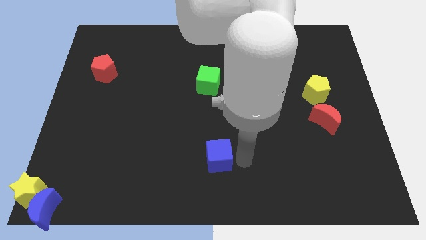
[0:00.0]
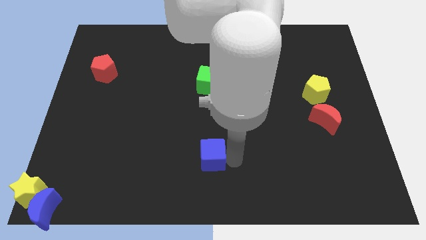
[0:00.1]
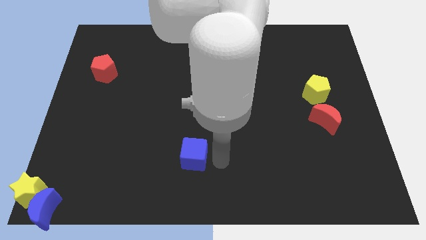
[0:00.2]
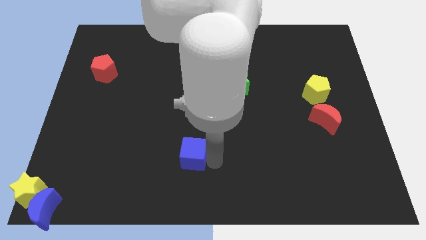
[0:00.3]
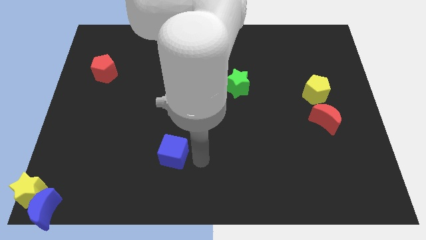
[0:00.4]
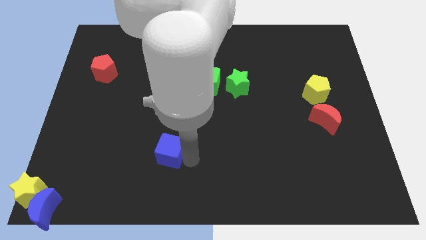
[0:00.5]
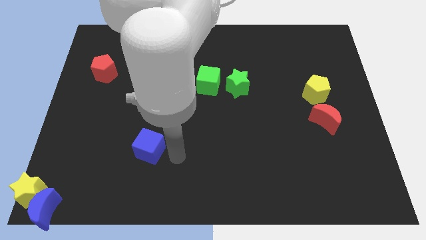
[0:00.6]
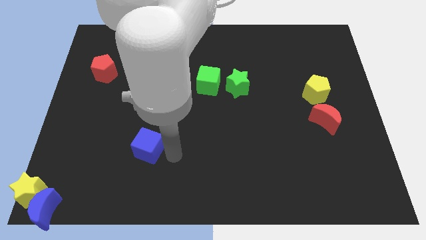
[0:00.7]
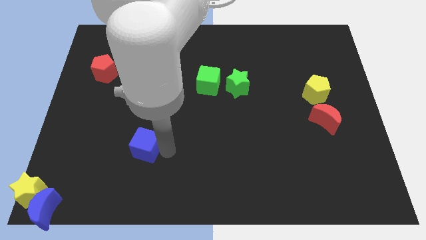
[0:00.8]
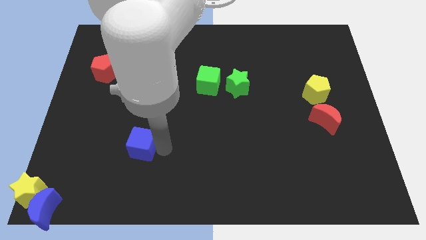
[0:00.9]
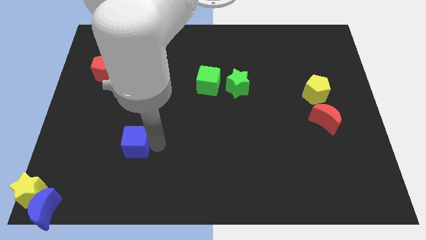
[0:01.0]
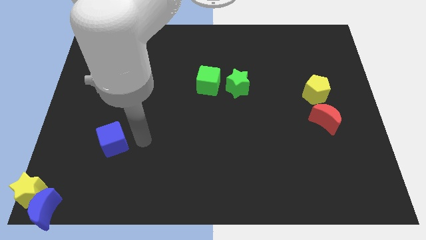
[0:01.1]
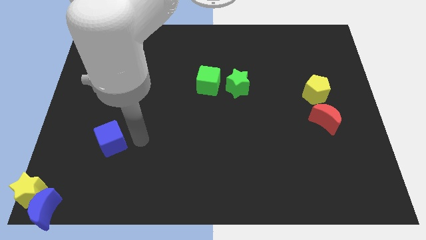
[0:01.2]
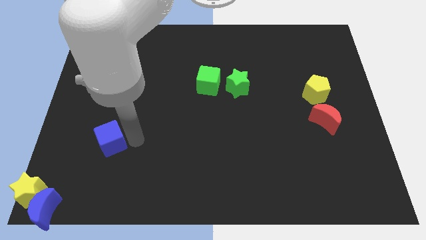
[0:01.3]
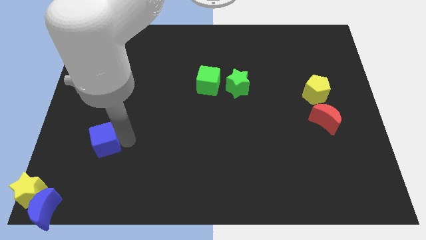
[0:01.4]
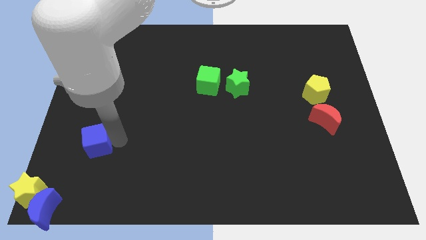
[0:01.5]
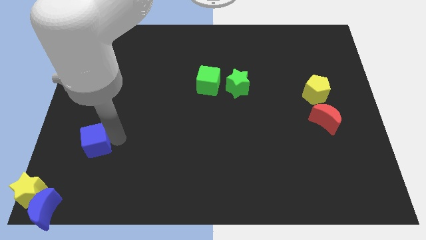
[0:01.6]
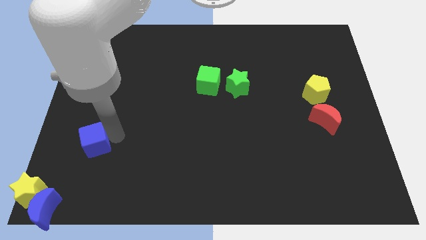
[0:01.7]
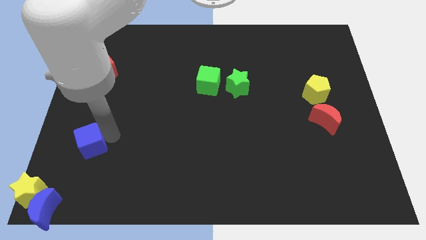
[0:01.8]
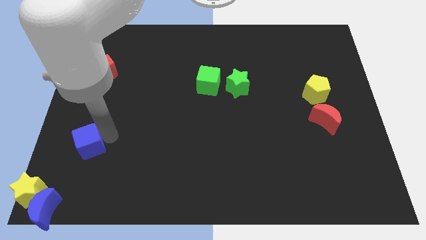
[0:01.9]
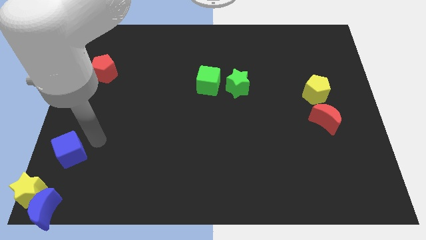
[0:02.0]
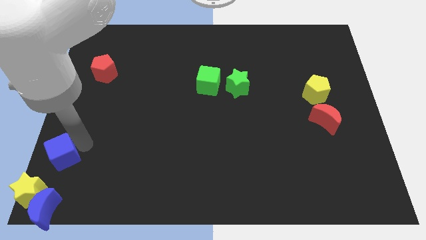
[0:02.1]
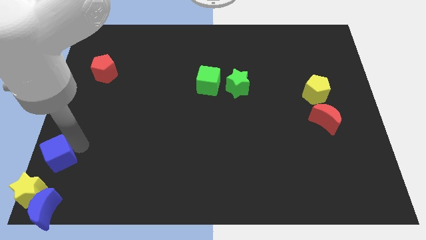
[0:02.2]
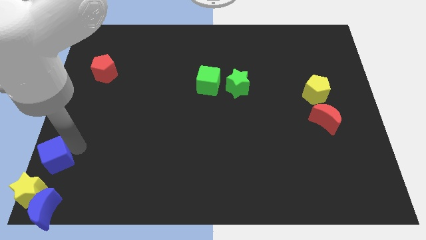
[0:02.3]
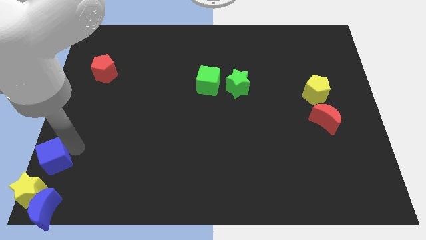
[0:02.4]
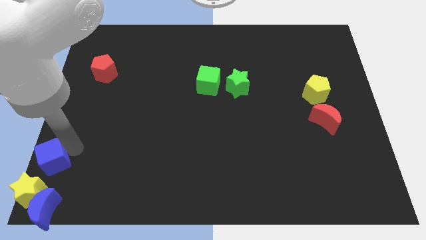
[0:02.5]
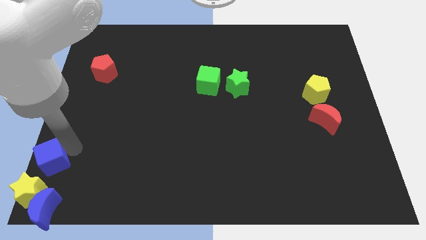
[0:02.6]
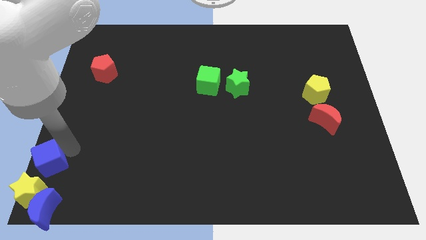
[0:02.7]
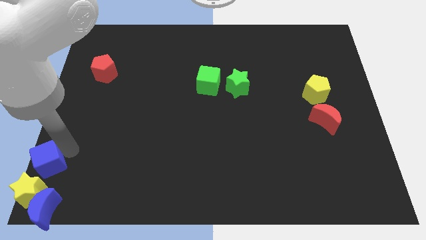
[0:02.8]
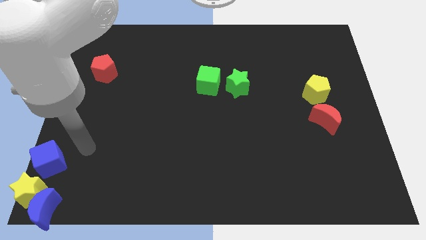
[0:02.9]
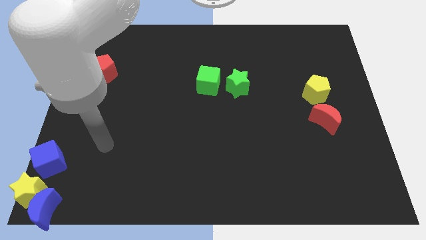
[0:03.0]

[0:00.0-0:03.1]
push the blue cube to the top of the yellow star

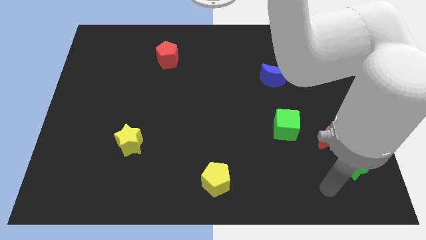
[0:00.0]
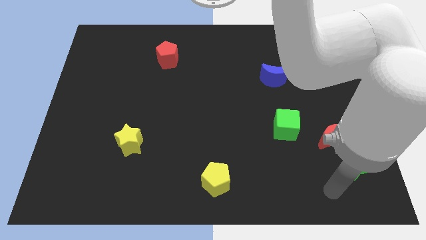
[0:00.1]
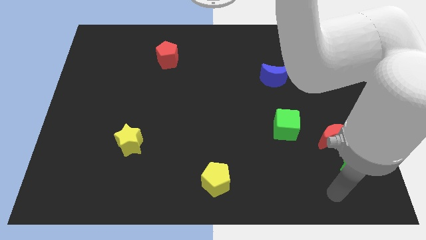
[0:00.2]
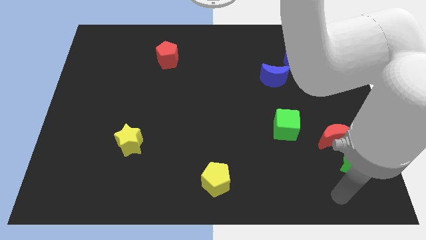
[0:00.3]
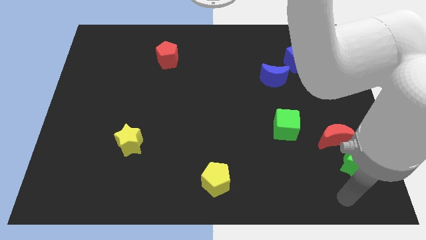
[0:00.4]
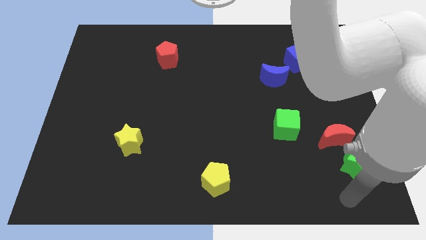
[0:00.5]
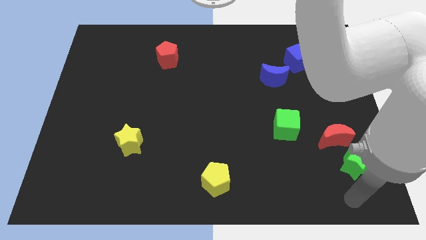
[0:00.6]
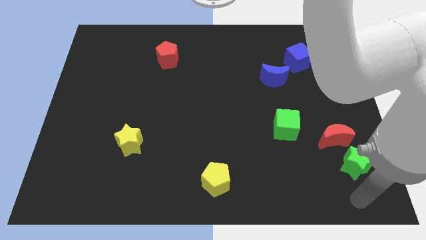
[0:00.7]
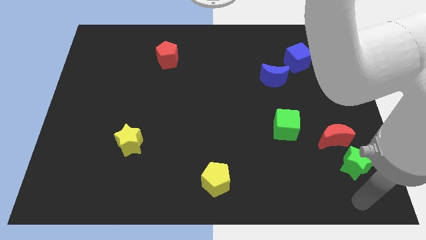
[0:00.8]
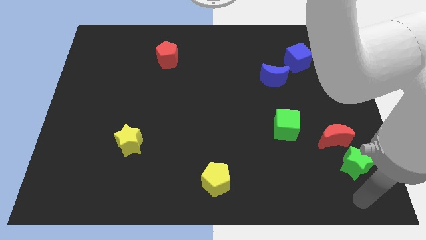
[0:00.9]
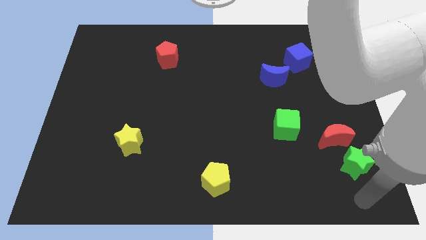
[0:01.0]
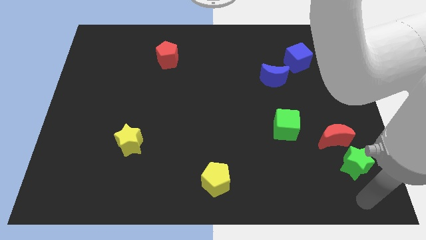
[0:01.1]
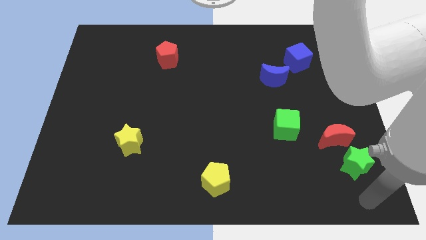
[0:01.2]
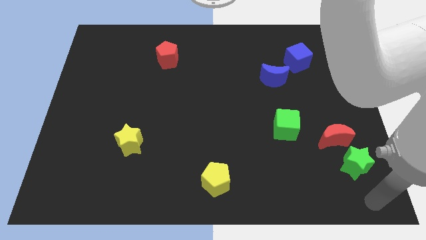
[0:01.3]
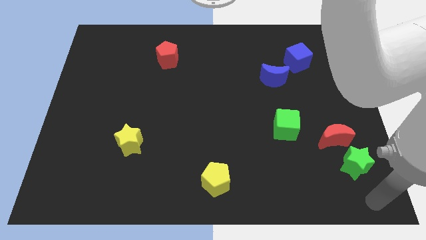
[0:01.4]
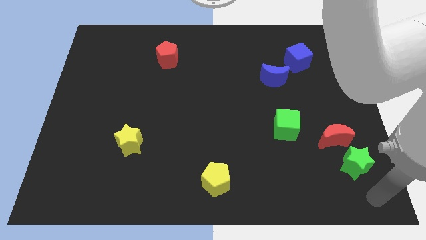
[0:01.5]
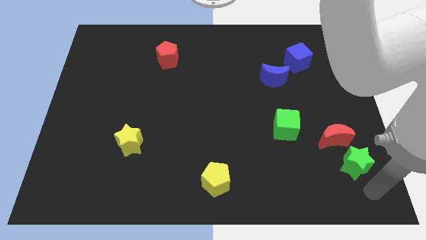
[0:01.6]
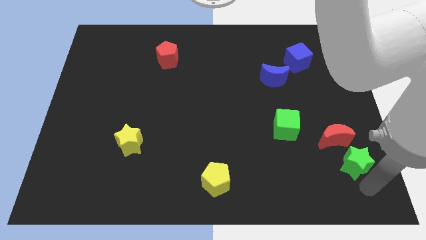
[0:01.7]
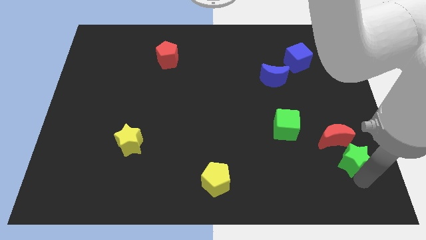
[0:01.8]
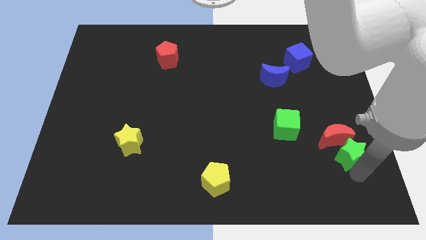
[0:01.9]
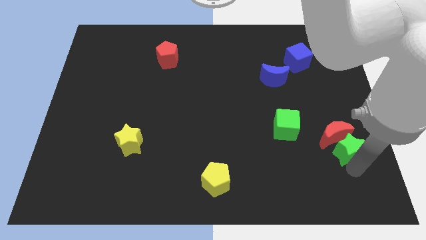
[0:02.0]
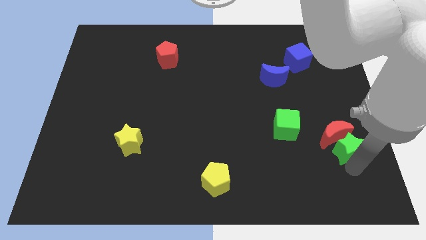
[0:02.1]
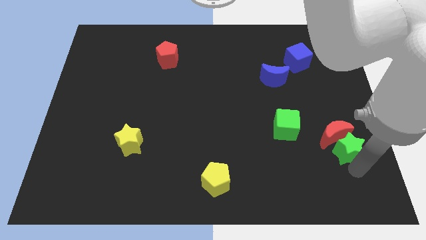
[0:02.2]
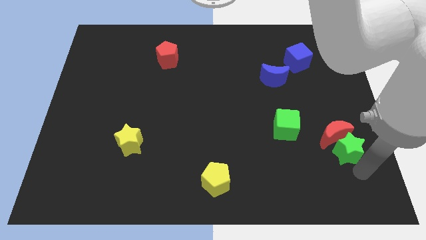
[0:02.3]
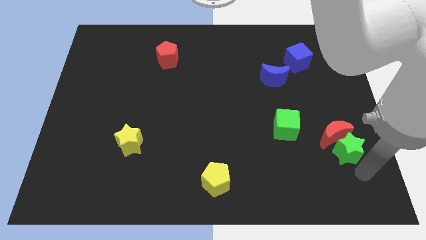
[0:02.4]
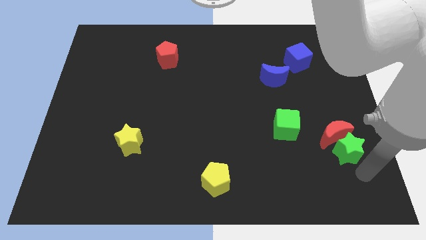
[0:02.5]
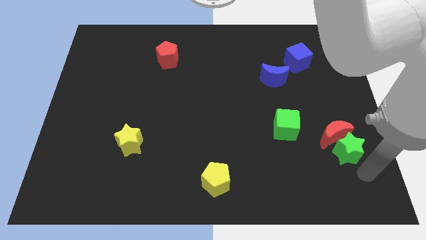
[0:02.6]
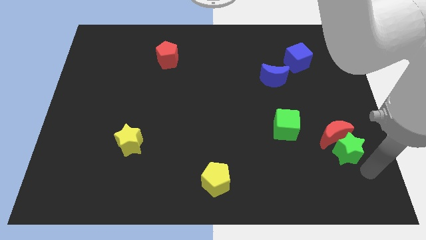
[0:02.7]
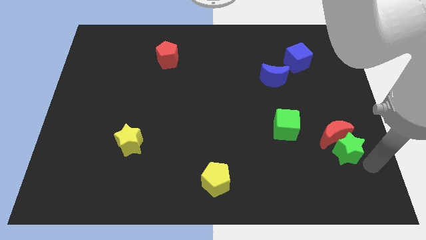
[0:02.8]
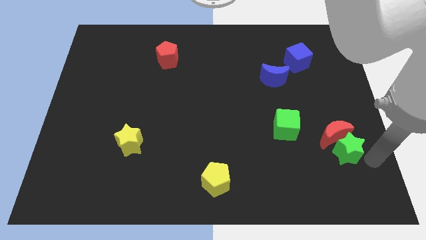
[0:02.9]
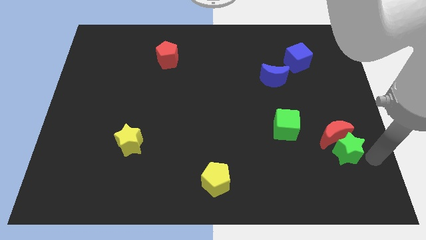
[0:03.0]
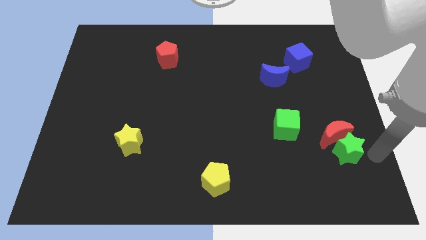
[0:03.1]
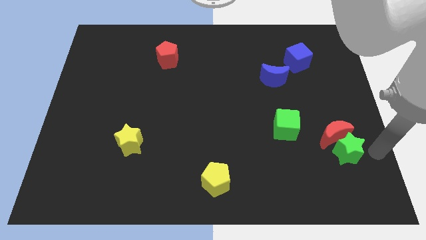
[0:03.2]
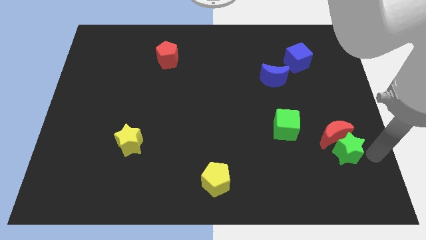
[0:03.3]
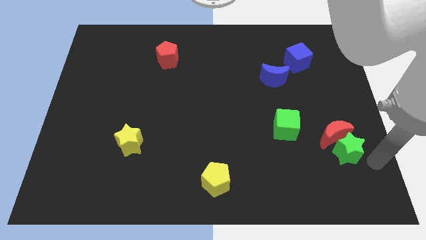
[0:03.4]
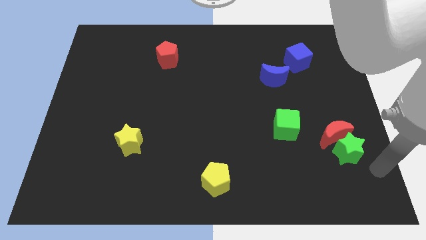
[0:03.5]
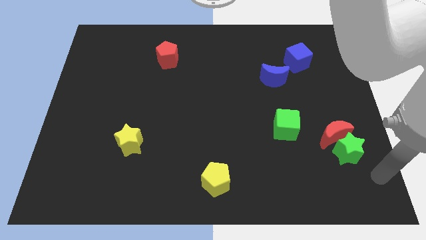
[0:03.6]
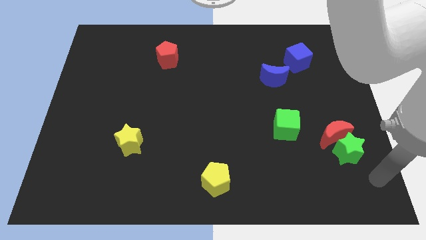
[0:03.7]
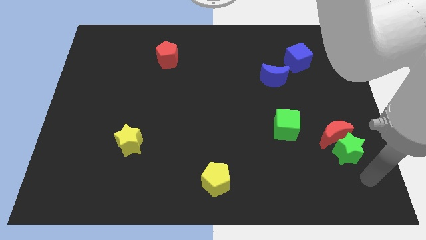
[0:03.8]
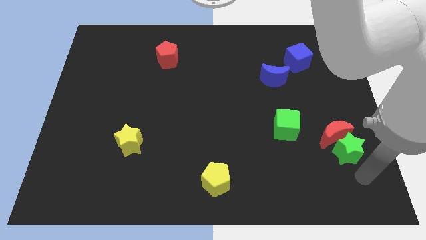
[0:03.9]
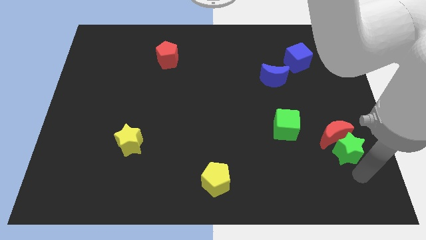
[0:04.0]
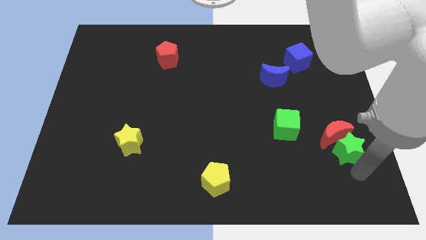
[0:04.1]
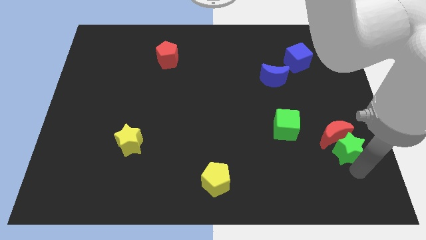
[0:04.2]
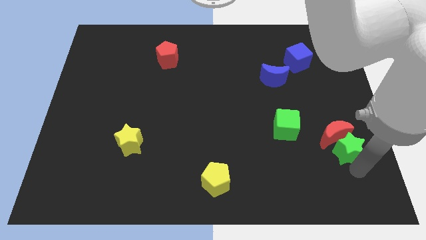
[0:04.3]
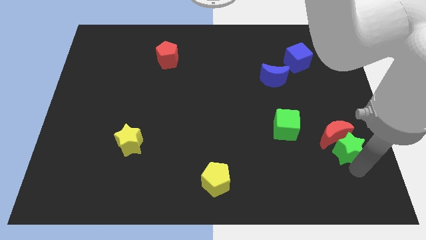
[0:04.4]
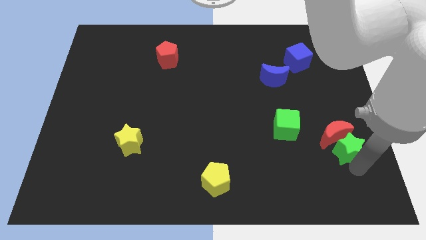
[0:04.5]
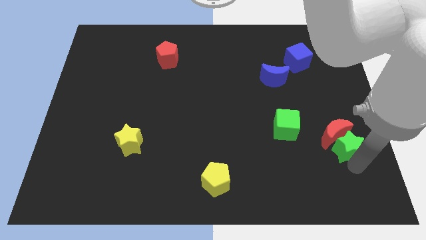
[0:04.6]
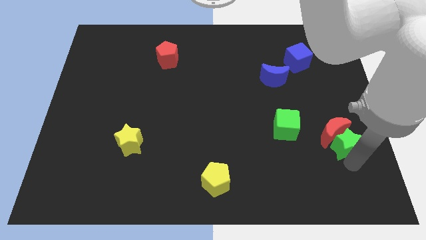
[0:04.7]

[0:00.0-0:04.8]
push the green star into the red crescent

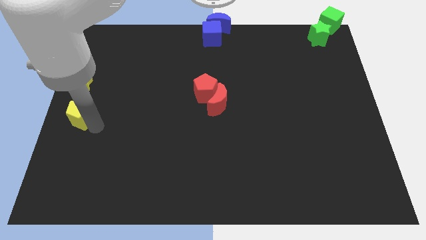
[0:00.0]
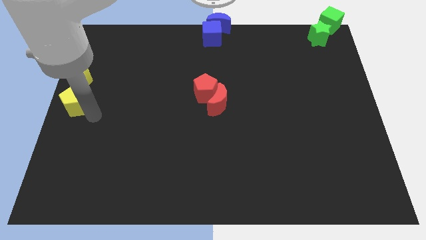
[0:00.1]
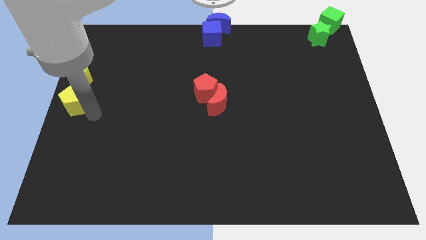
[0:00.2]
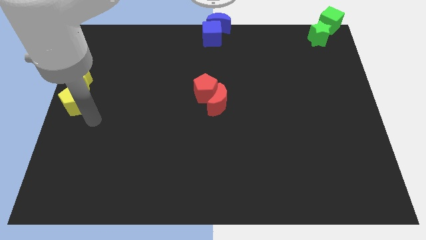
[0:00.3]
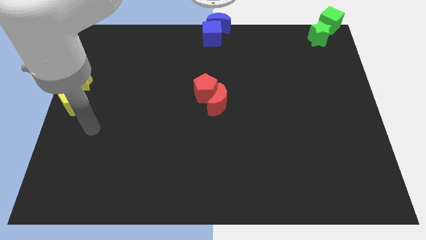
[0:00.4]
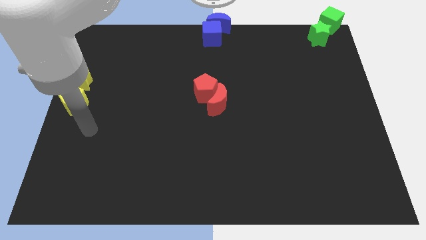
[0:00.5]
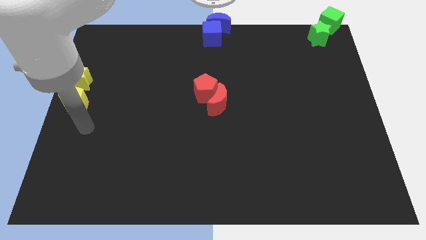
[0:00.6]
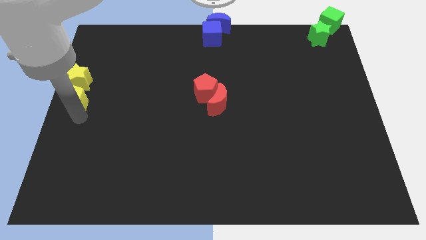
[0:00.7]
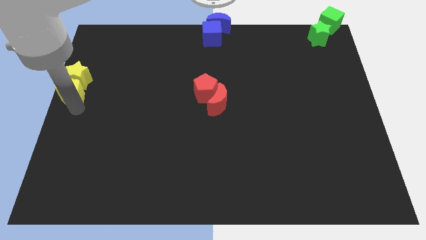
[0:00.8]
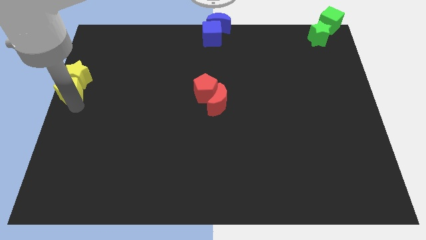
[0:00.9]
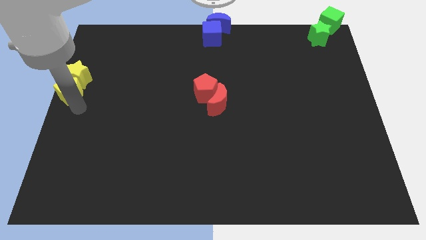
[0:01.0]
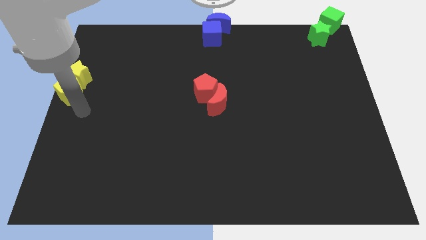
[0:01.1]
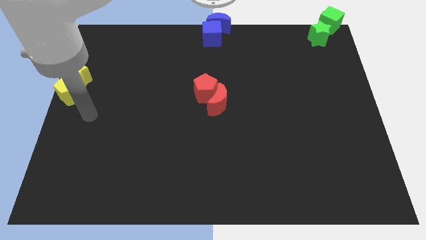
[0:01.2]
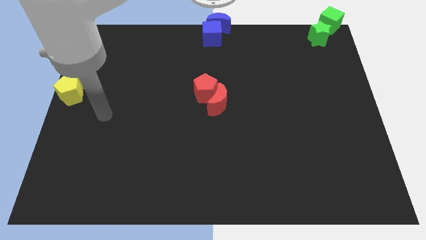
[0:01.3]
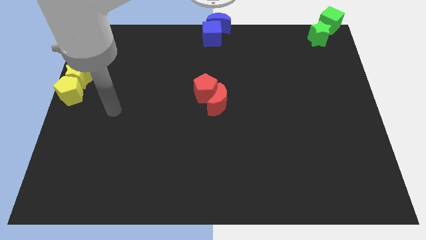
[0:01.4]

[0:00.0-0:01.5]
push the yellow pentagon into the yellow star
